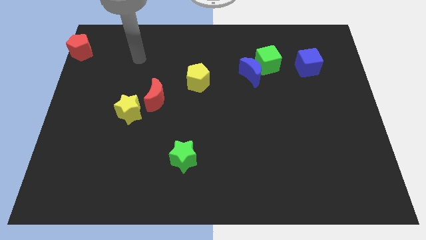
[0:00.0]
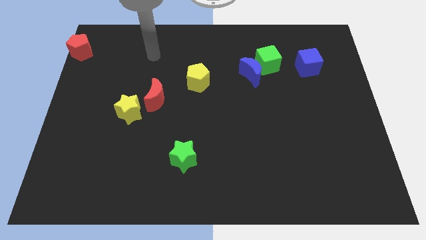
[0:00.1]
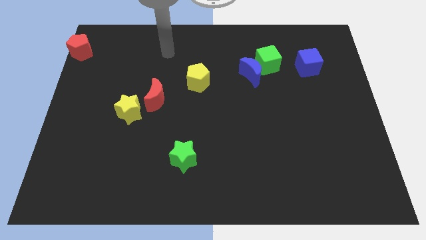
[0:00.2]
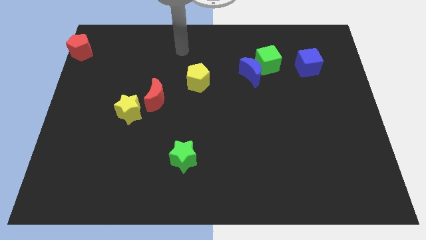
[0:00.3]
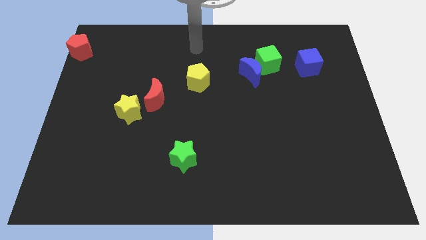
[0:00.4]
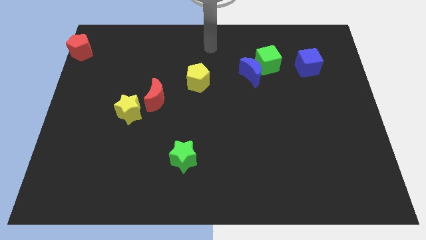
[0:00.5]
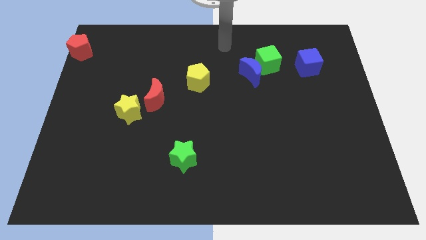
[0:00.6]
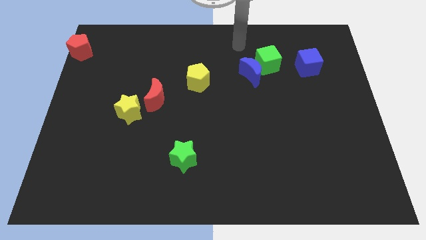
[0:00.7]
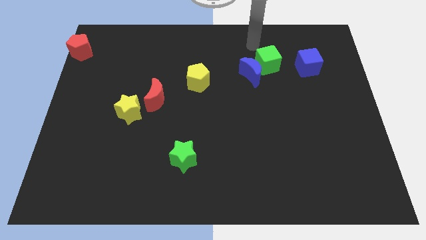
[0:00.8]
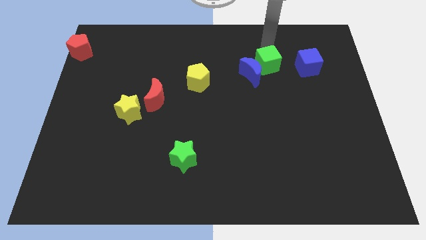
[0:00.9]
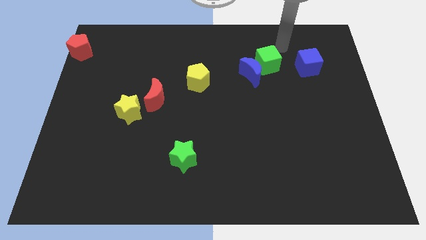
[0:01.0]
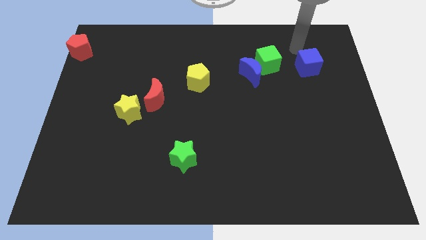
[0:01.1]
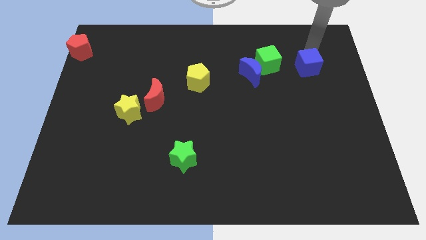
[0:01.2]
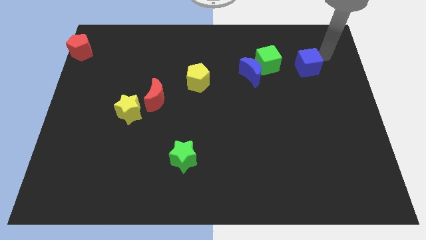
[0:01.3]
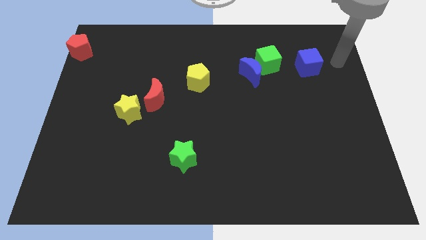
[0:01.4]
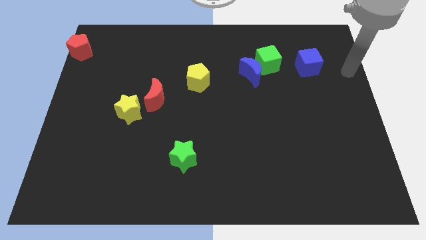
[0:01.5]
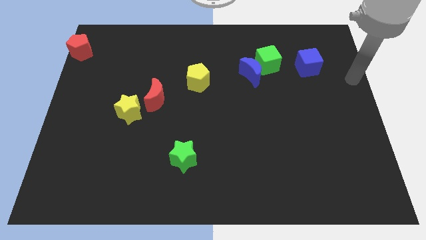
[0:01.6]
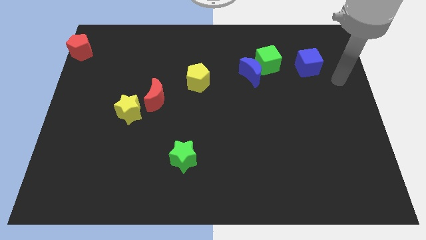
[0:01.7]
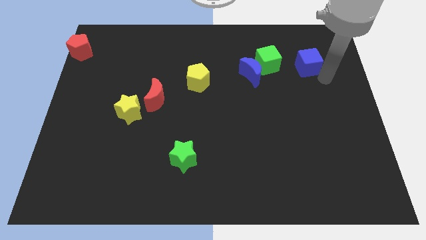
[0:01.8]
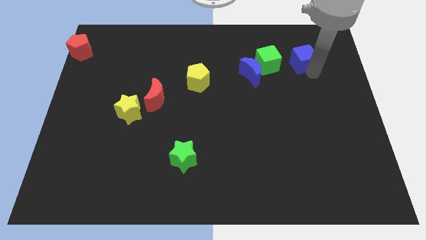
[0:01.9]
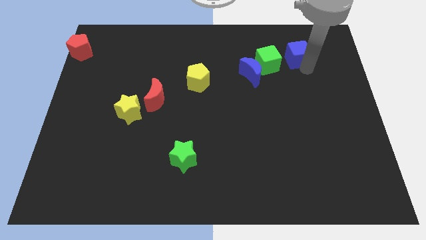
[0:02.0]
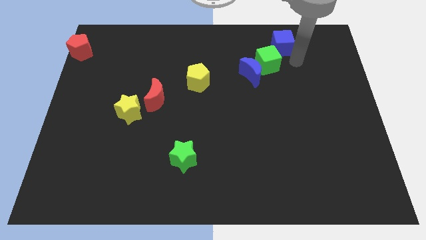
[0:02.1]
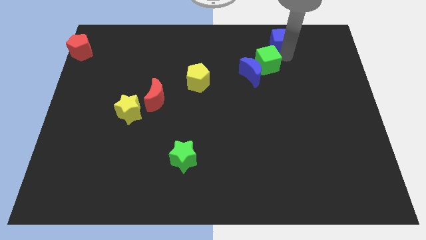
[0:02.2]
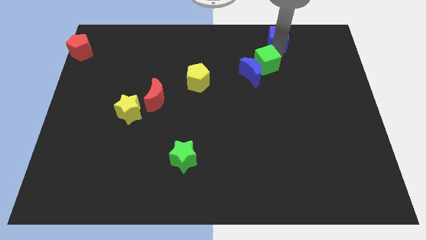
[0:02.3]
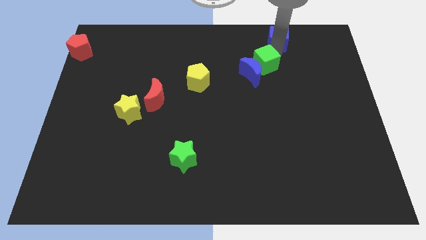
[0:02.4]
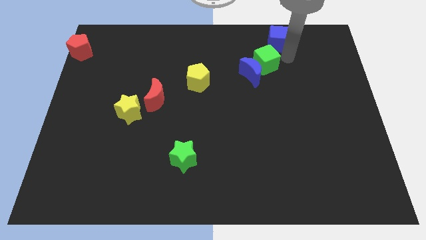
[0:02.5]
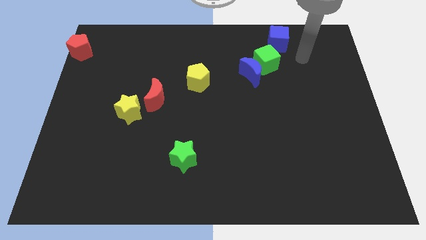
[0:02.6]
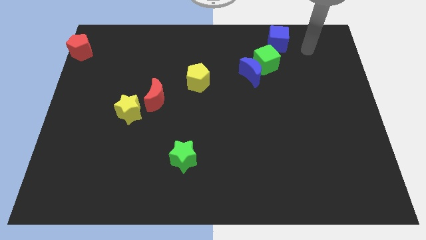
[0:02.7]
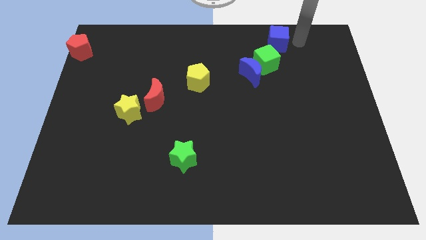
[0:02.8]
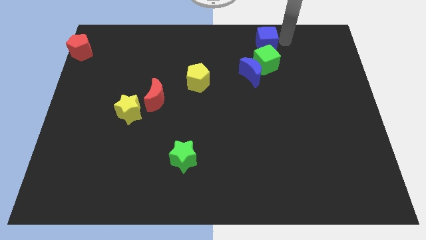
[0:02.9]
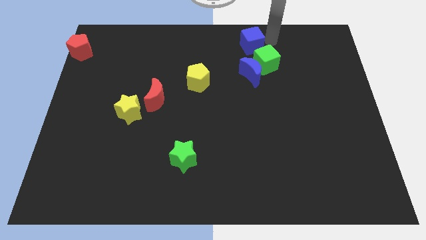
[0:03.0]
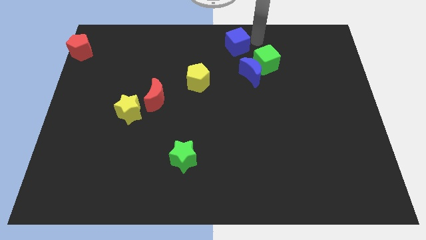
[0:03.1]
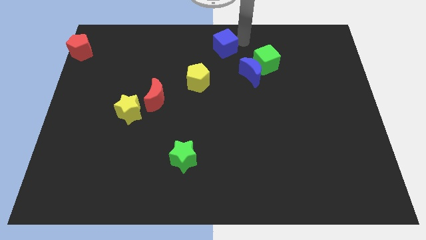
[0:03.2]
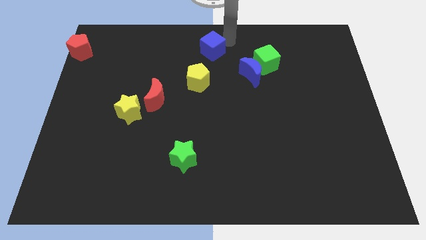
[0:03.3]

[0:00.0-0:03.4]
move blue cube to the top centre of the board

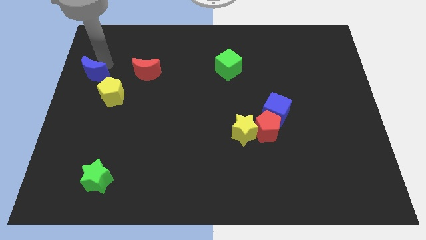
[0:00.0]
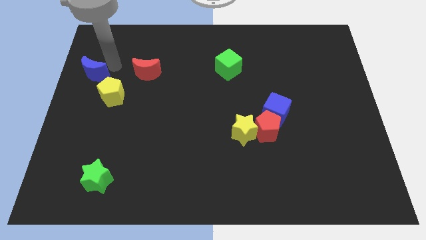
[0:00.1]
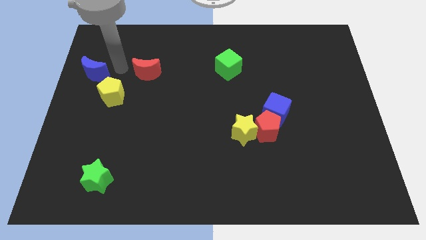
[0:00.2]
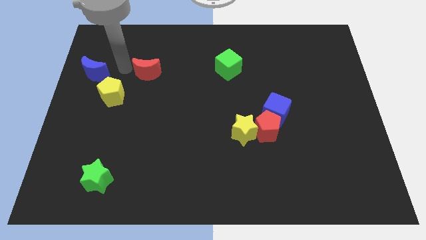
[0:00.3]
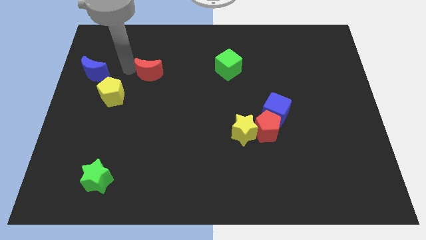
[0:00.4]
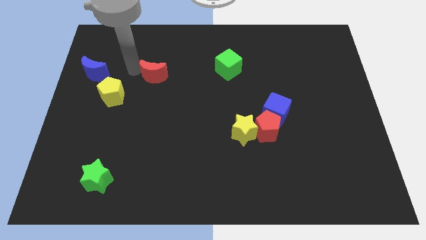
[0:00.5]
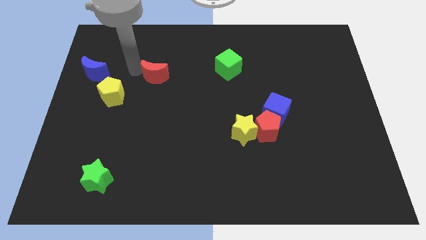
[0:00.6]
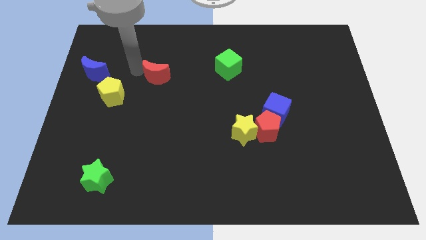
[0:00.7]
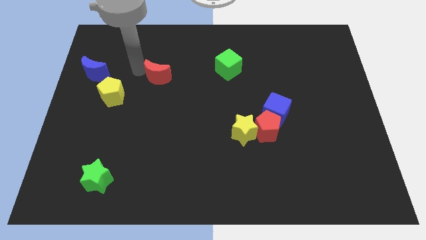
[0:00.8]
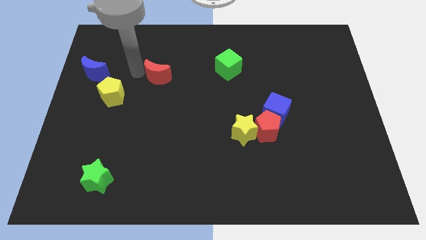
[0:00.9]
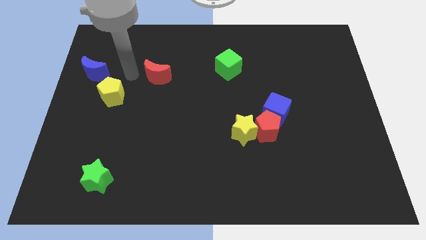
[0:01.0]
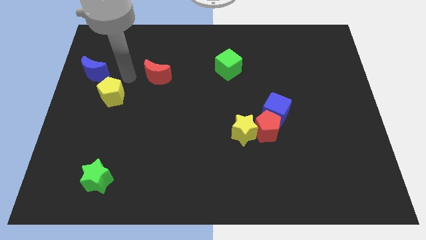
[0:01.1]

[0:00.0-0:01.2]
put the red crescent diagonal to the yellow star

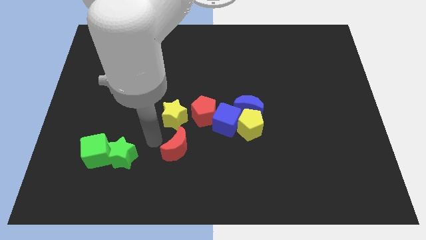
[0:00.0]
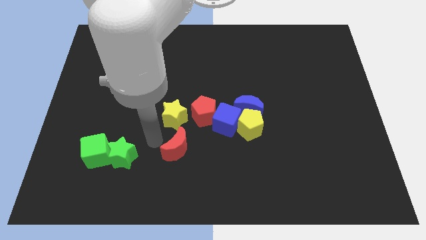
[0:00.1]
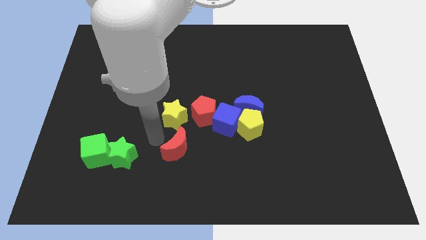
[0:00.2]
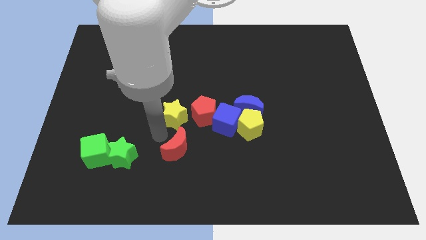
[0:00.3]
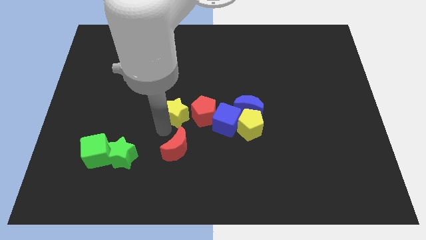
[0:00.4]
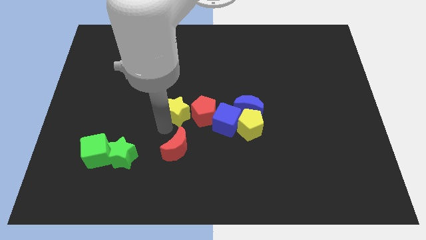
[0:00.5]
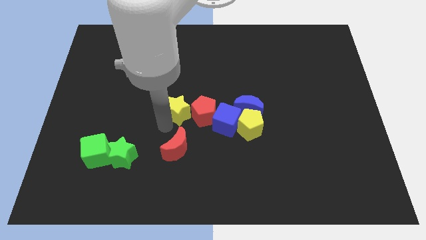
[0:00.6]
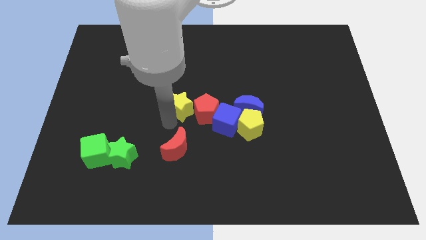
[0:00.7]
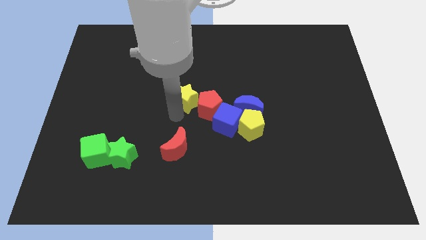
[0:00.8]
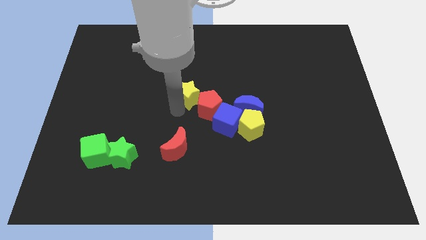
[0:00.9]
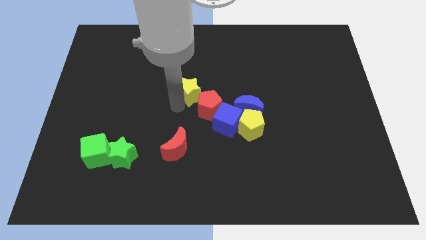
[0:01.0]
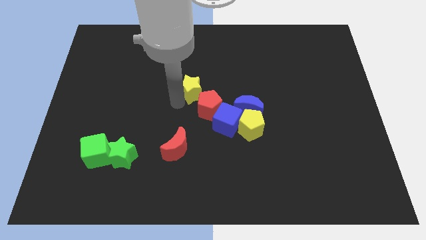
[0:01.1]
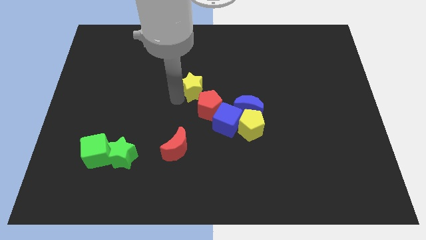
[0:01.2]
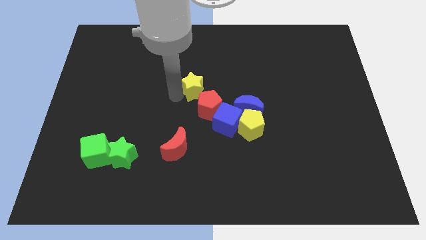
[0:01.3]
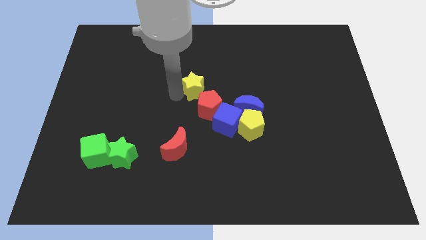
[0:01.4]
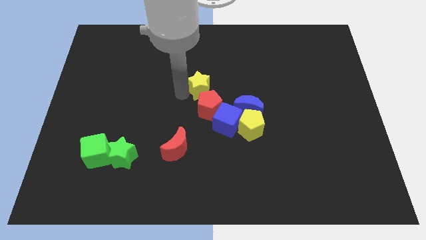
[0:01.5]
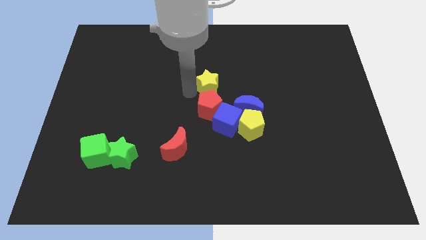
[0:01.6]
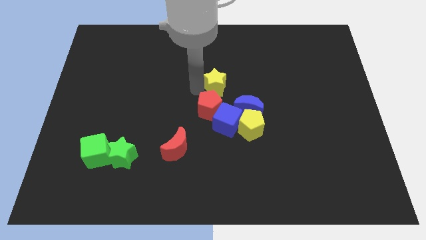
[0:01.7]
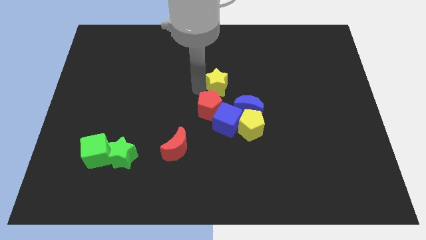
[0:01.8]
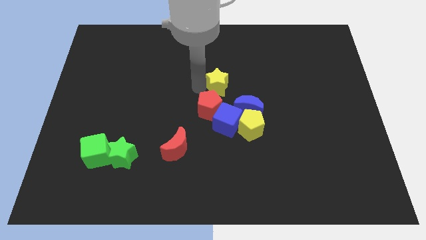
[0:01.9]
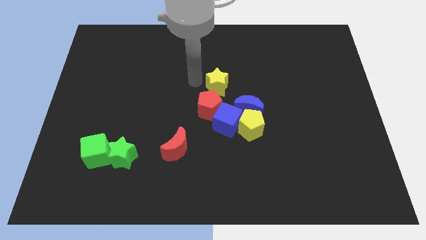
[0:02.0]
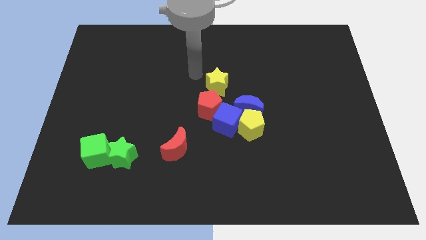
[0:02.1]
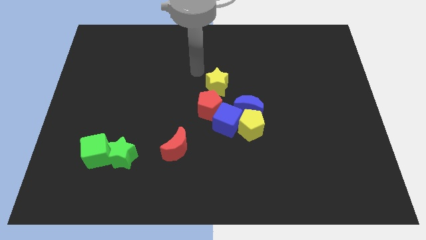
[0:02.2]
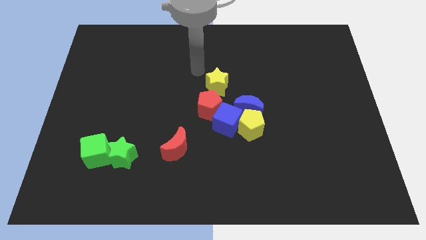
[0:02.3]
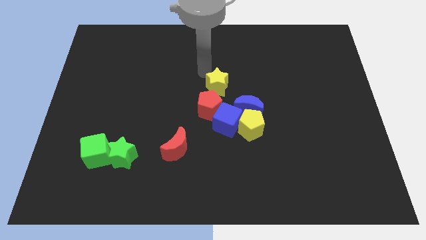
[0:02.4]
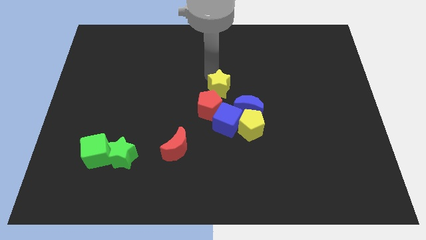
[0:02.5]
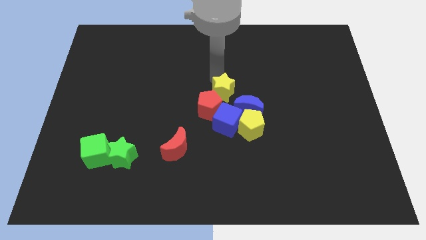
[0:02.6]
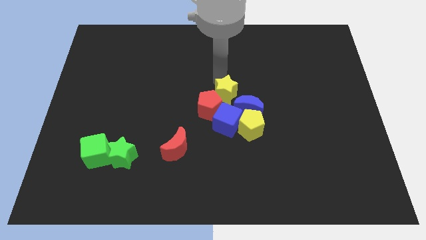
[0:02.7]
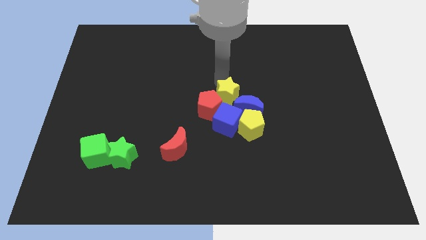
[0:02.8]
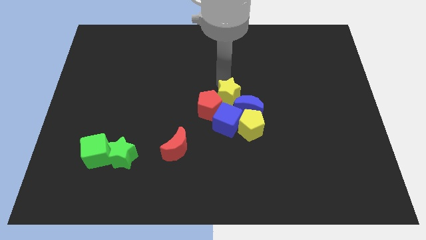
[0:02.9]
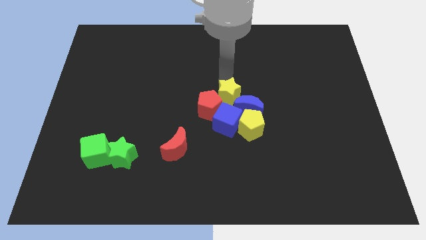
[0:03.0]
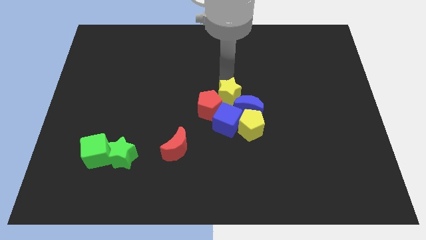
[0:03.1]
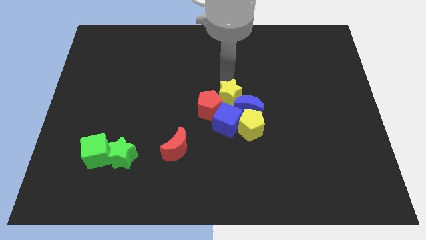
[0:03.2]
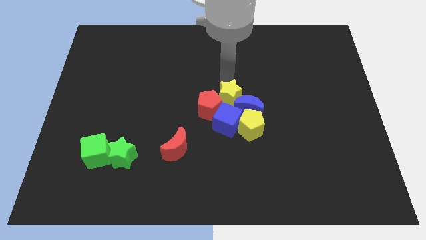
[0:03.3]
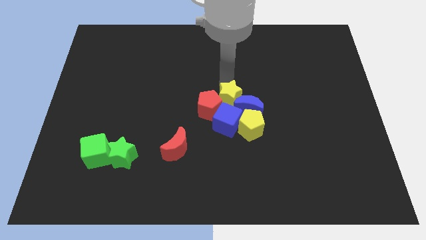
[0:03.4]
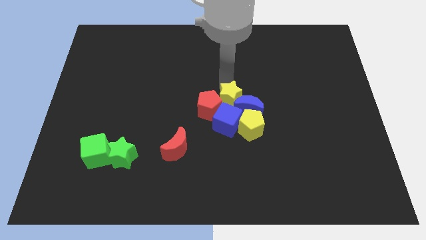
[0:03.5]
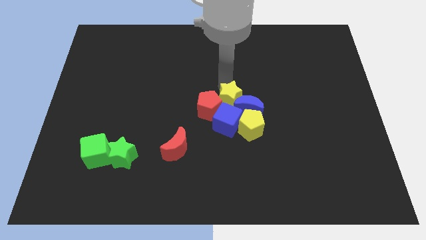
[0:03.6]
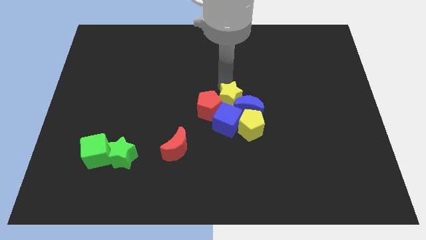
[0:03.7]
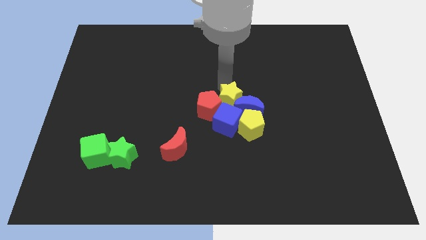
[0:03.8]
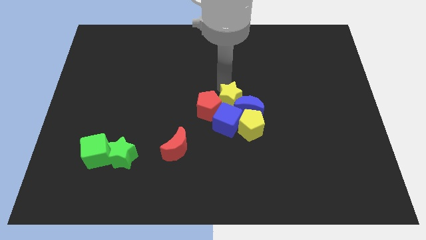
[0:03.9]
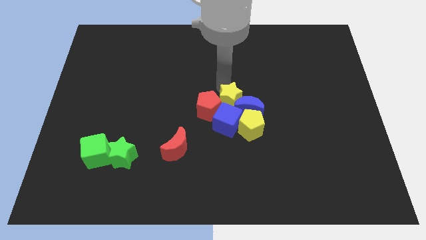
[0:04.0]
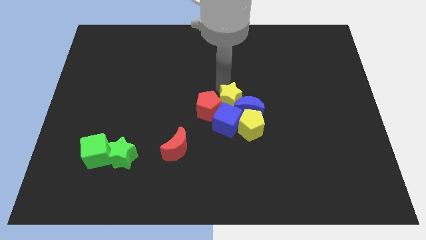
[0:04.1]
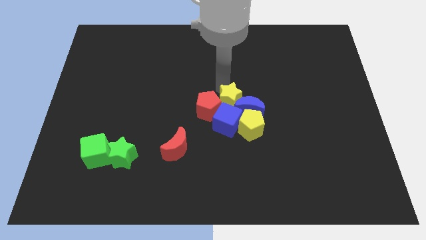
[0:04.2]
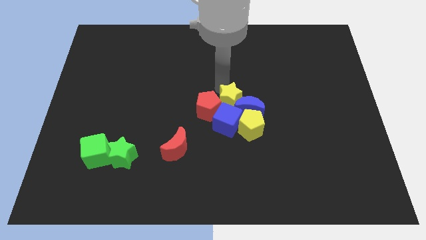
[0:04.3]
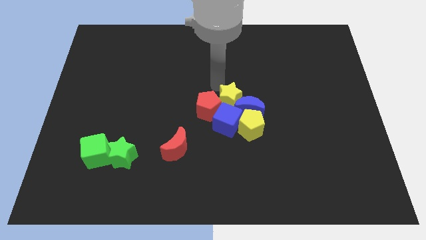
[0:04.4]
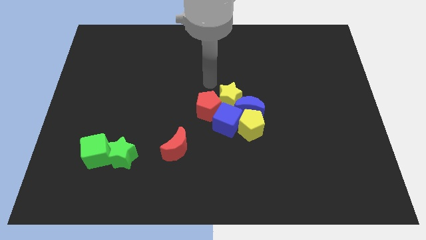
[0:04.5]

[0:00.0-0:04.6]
push the yellow star to the top side of the blue cube
